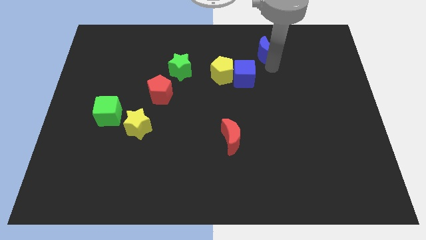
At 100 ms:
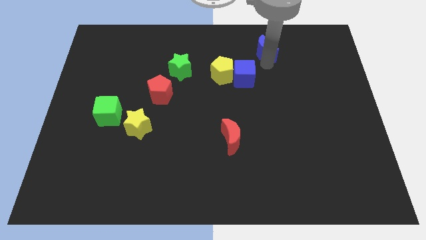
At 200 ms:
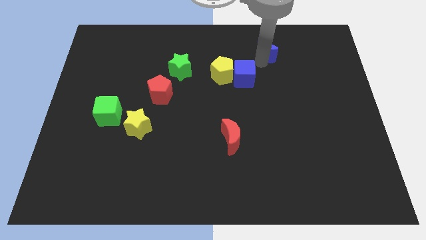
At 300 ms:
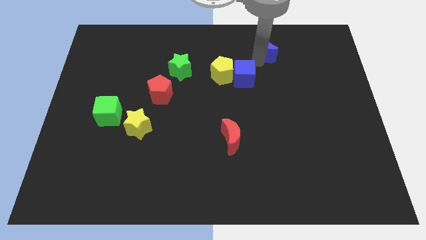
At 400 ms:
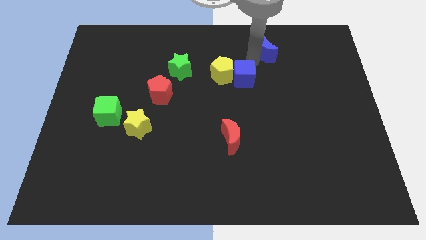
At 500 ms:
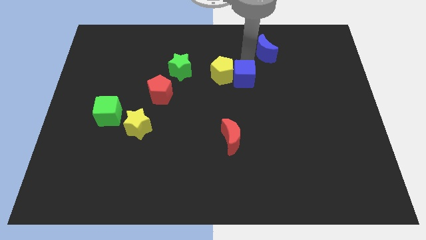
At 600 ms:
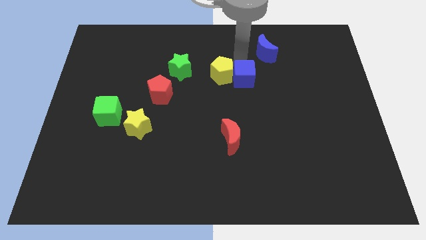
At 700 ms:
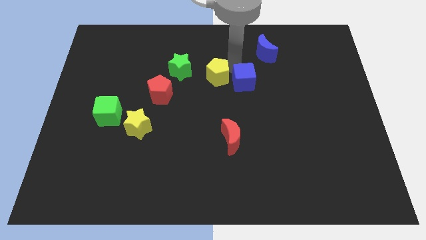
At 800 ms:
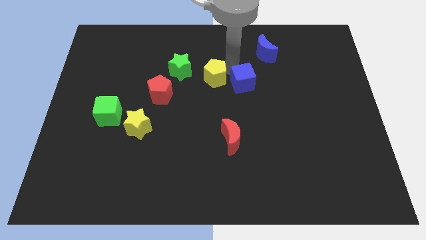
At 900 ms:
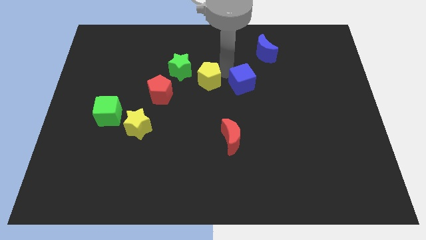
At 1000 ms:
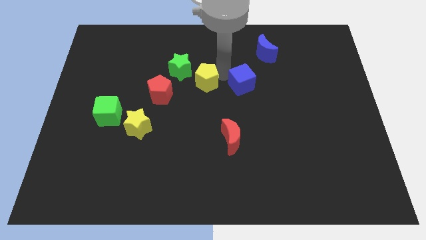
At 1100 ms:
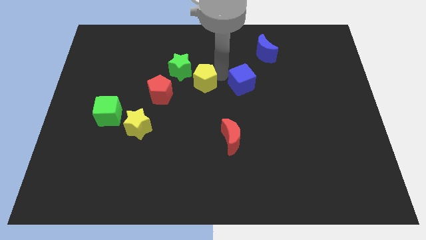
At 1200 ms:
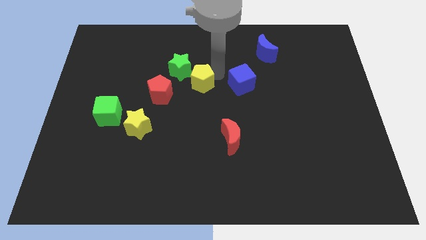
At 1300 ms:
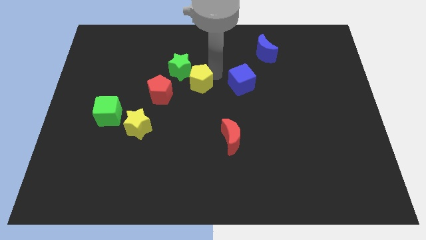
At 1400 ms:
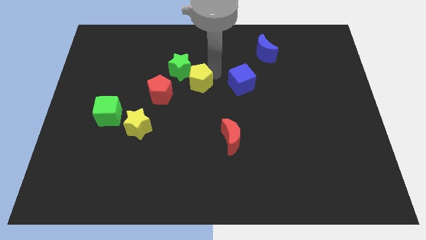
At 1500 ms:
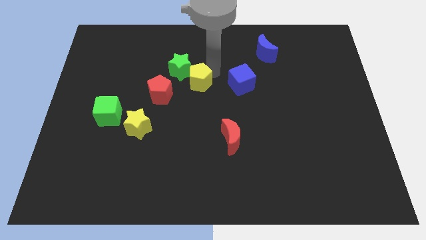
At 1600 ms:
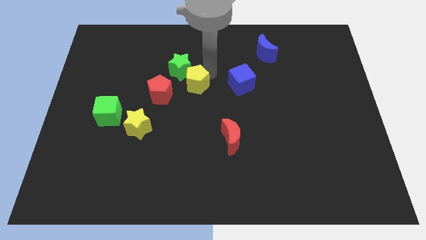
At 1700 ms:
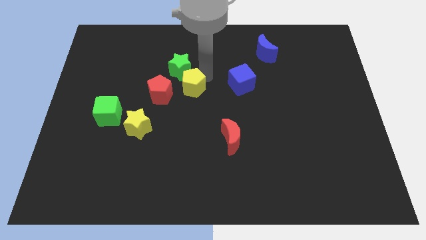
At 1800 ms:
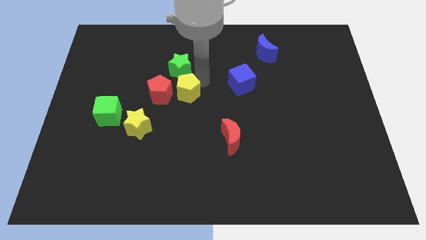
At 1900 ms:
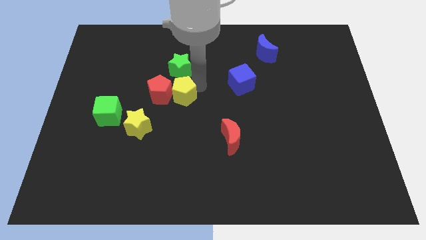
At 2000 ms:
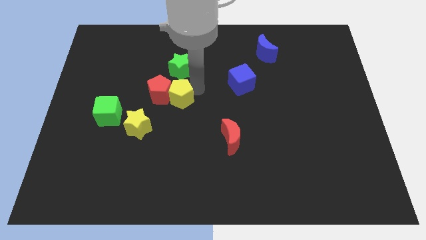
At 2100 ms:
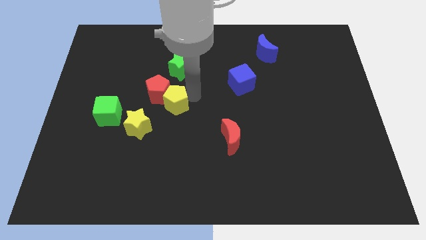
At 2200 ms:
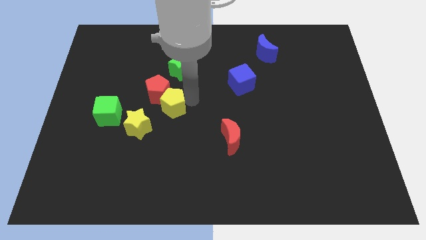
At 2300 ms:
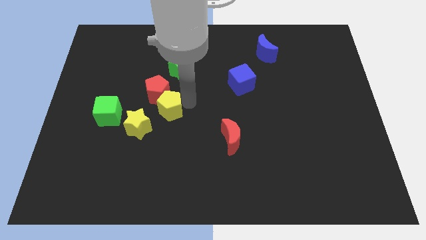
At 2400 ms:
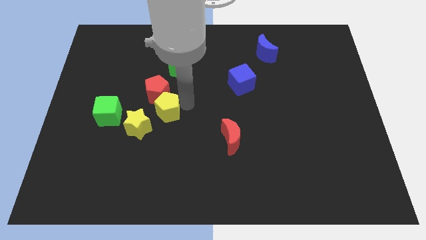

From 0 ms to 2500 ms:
seperate the yellow pentagon and blue cube

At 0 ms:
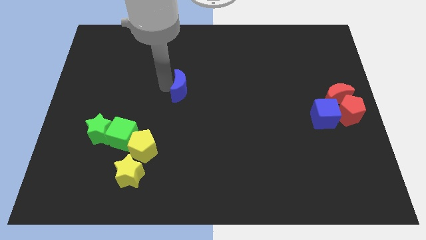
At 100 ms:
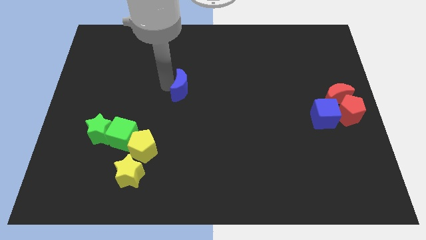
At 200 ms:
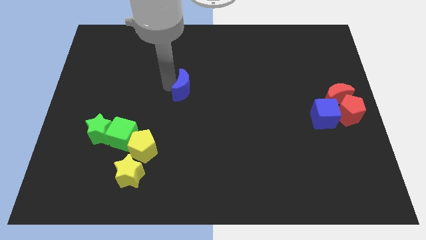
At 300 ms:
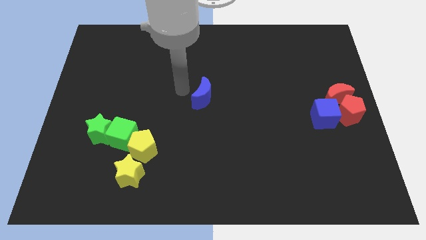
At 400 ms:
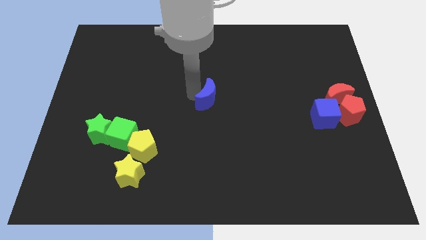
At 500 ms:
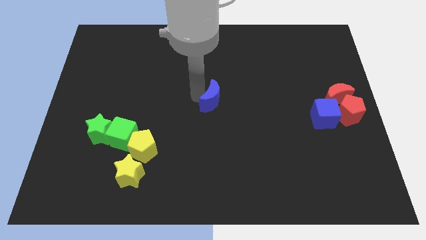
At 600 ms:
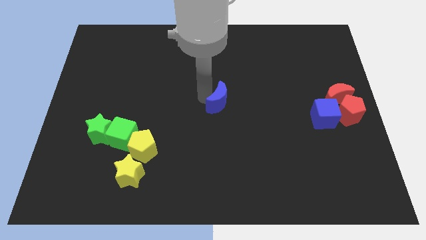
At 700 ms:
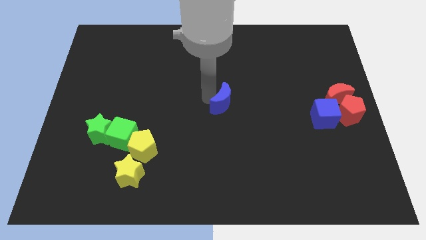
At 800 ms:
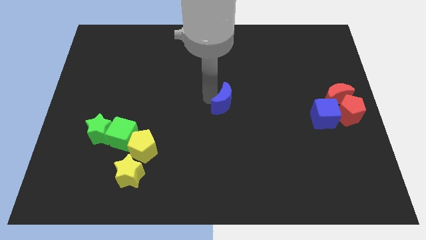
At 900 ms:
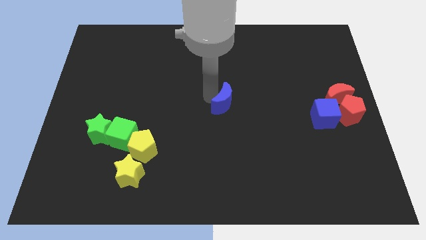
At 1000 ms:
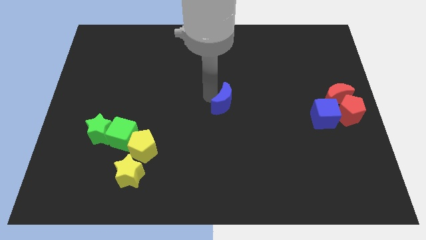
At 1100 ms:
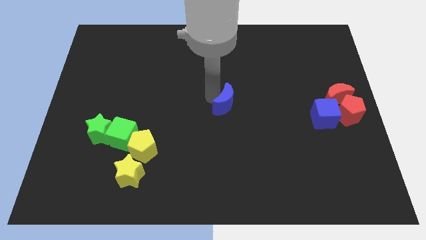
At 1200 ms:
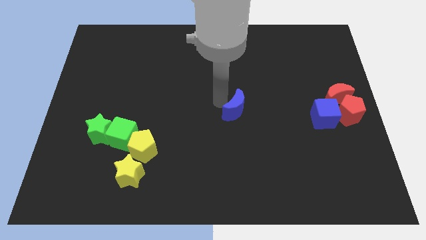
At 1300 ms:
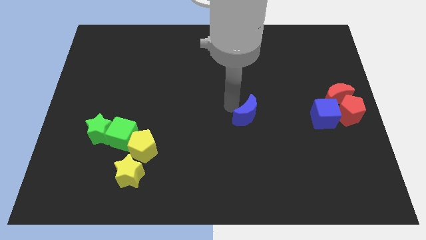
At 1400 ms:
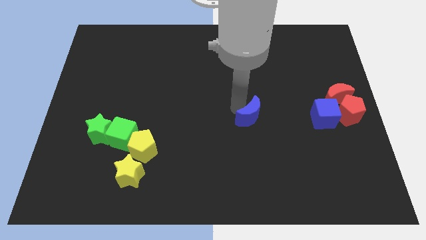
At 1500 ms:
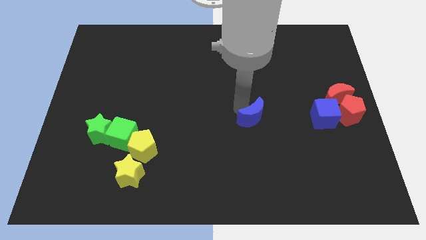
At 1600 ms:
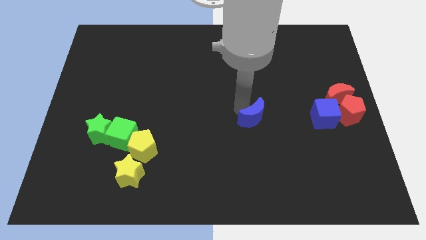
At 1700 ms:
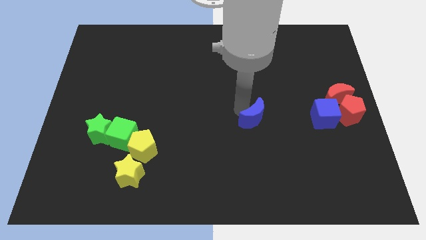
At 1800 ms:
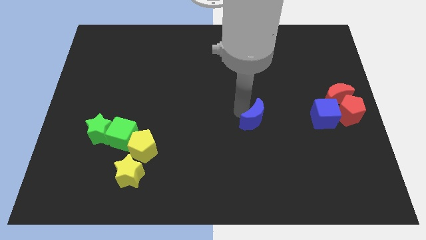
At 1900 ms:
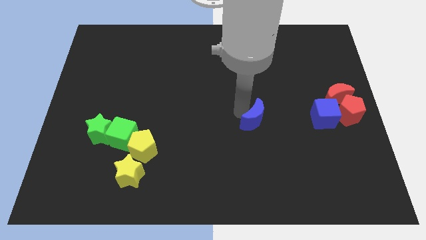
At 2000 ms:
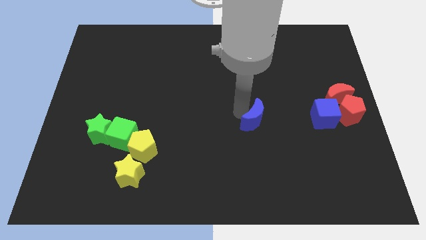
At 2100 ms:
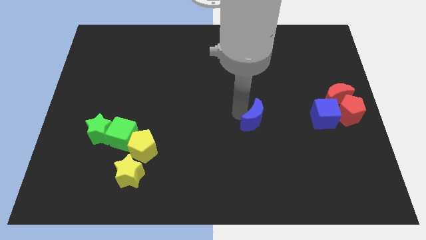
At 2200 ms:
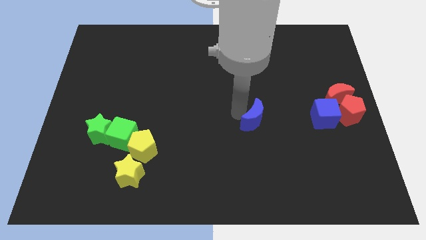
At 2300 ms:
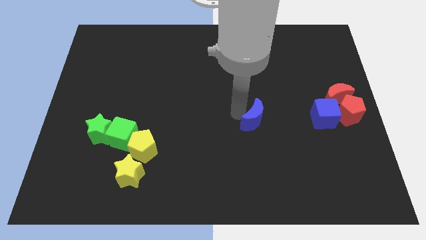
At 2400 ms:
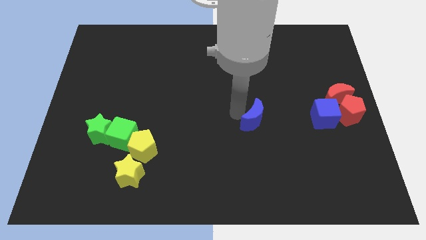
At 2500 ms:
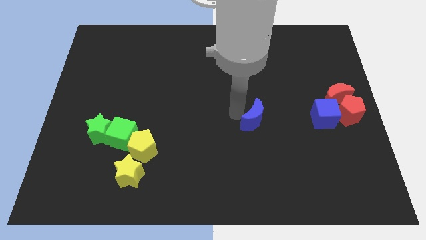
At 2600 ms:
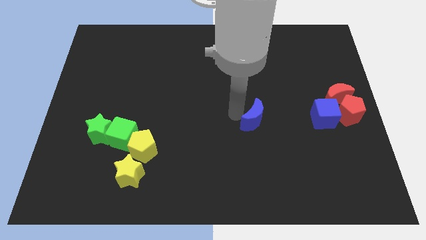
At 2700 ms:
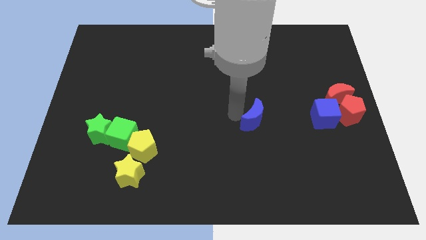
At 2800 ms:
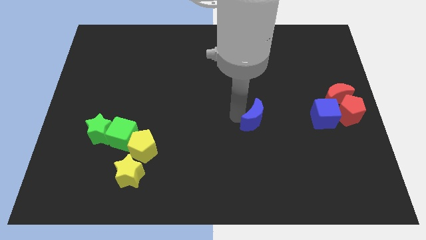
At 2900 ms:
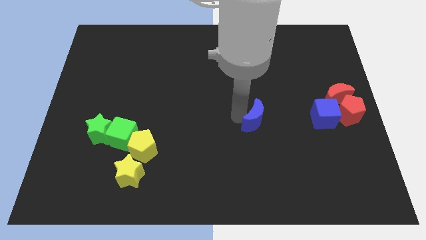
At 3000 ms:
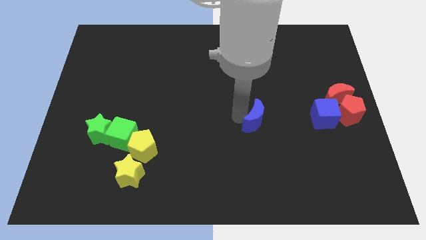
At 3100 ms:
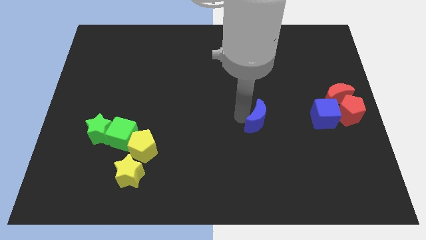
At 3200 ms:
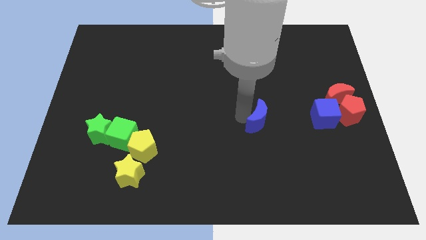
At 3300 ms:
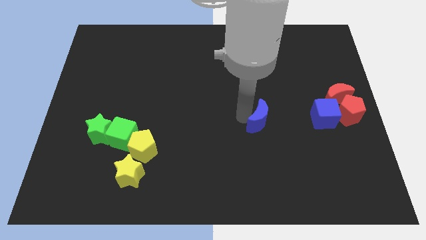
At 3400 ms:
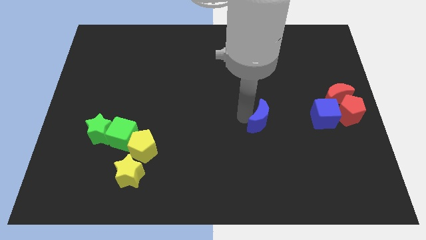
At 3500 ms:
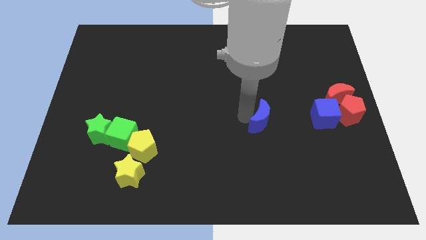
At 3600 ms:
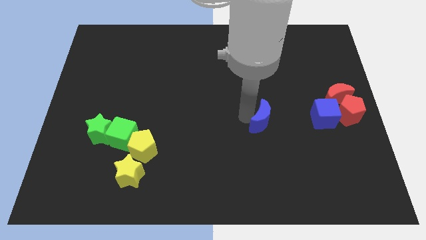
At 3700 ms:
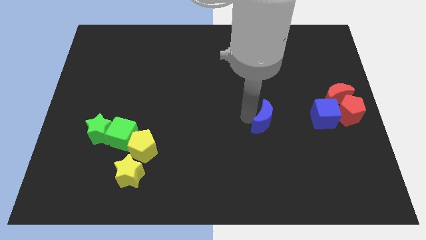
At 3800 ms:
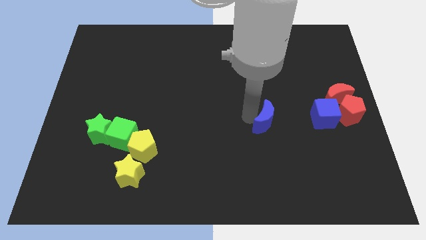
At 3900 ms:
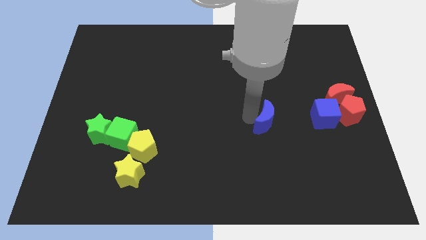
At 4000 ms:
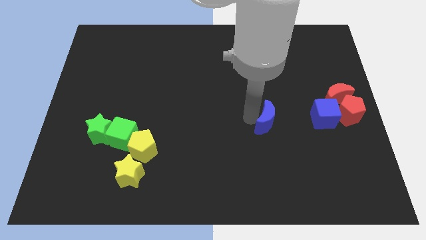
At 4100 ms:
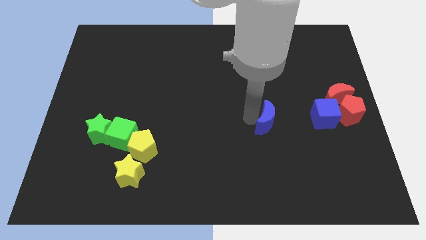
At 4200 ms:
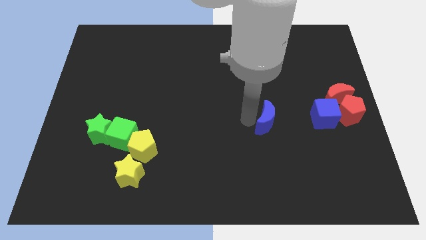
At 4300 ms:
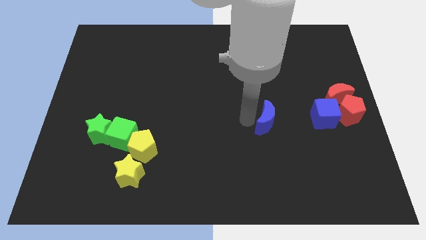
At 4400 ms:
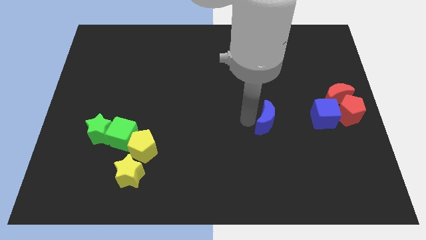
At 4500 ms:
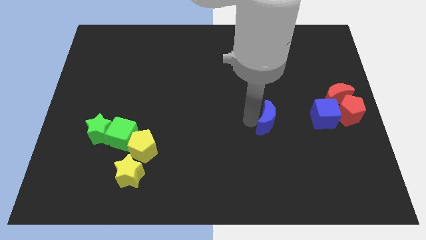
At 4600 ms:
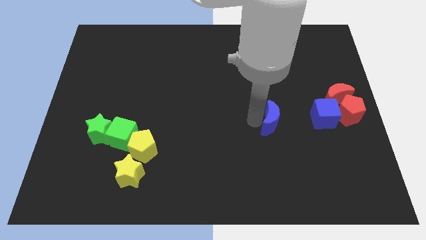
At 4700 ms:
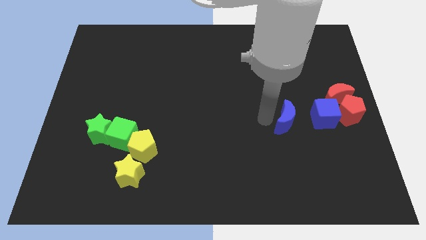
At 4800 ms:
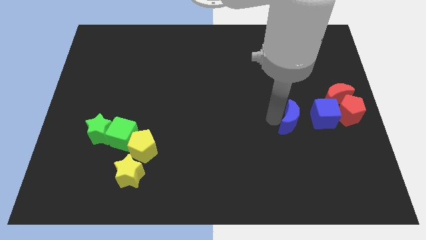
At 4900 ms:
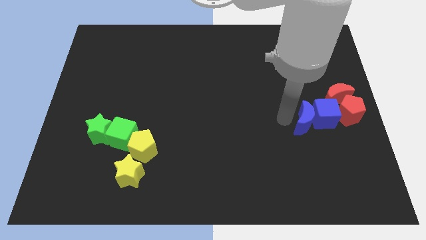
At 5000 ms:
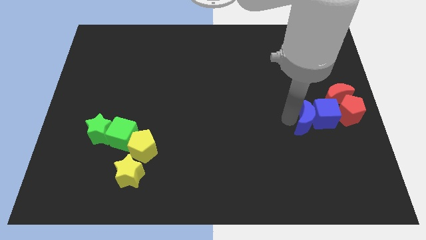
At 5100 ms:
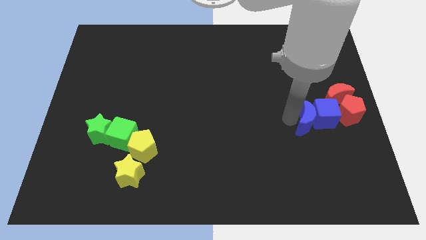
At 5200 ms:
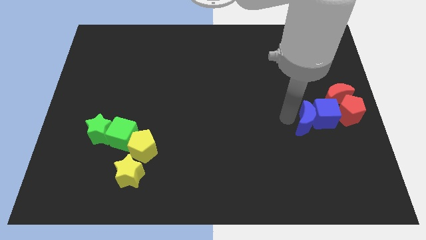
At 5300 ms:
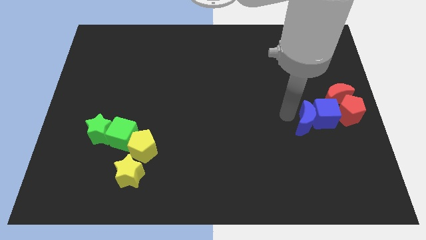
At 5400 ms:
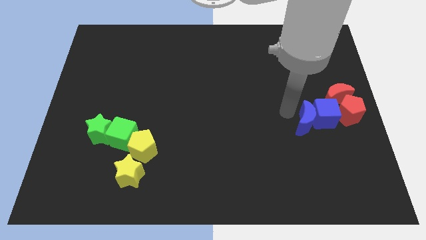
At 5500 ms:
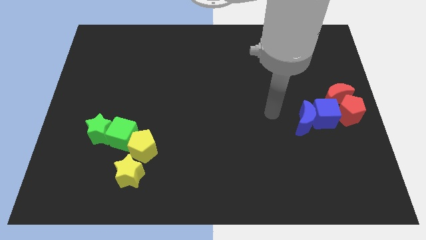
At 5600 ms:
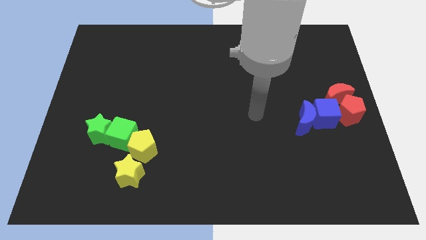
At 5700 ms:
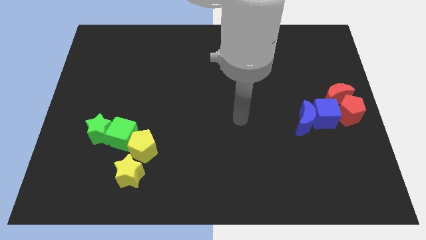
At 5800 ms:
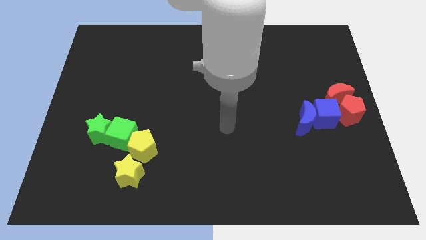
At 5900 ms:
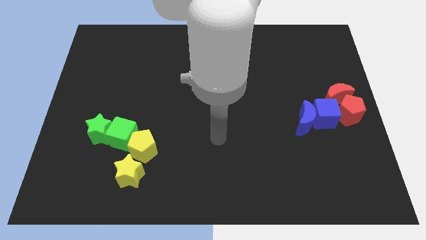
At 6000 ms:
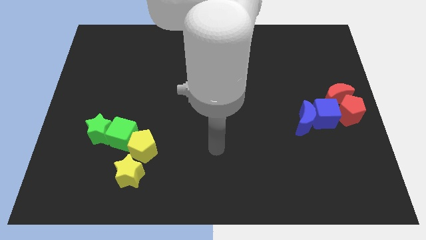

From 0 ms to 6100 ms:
push the blue crescent into the blue cube

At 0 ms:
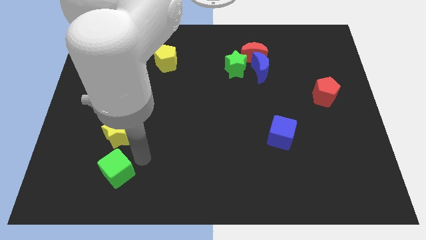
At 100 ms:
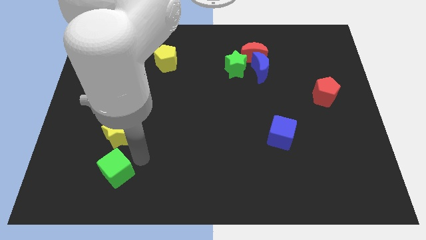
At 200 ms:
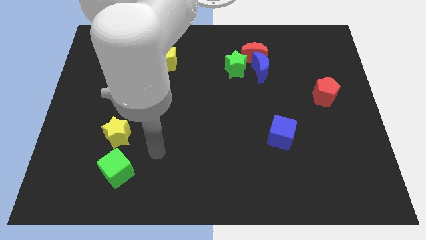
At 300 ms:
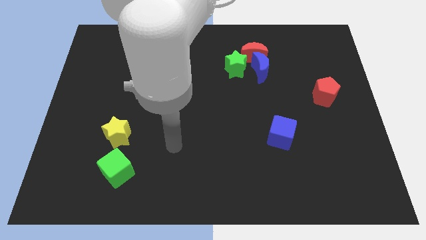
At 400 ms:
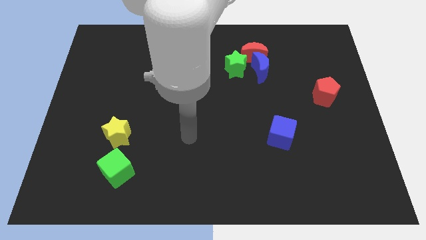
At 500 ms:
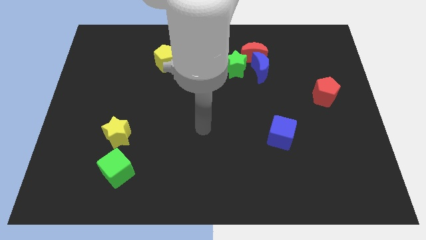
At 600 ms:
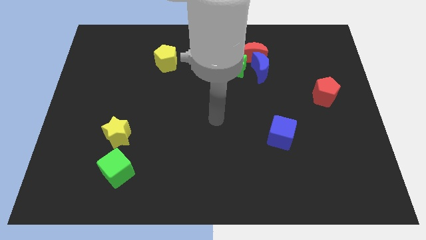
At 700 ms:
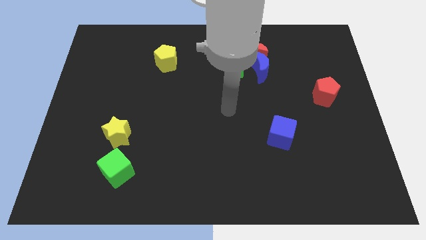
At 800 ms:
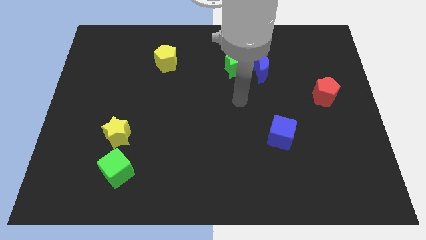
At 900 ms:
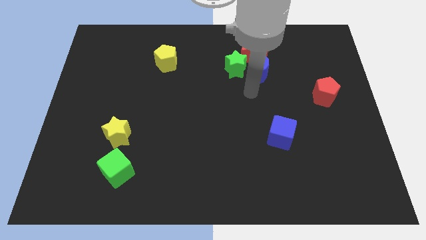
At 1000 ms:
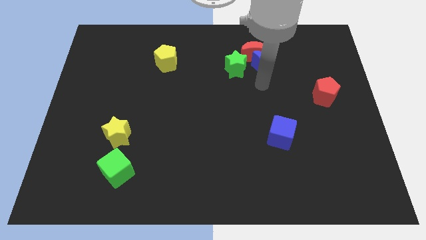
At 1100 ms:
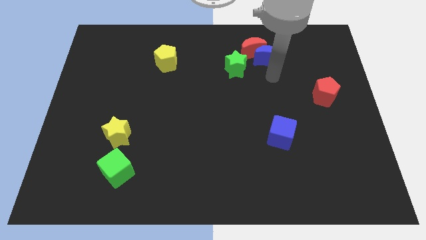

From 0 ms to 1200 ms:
touch the bottom side of the blue crescent
